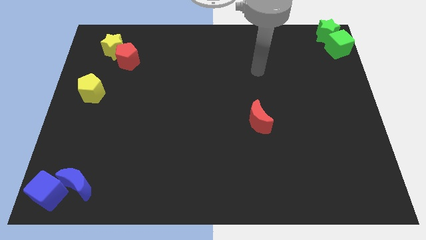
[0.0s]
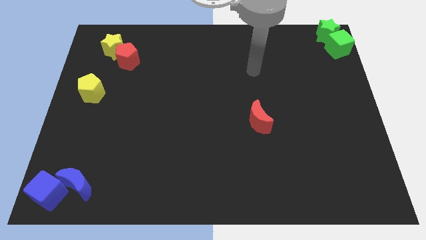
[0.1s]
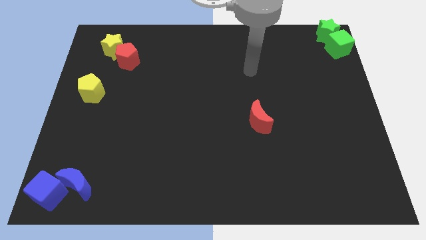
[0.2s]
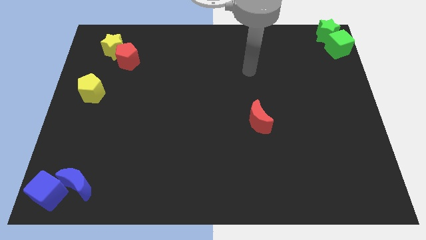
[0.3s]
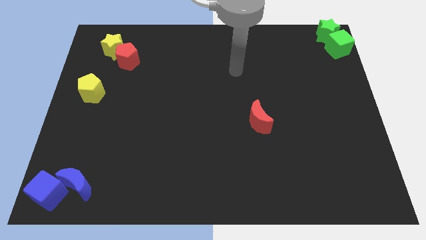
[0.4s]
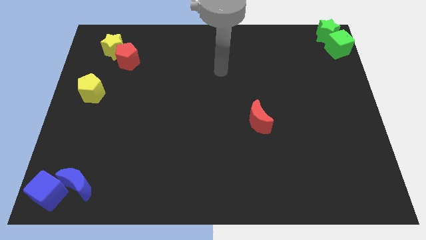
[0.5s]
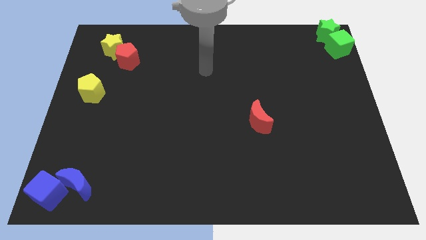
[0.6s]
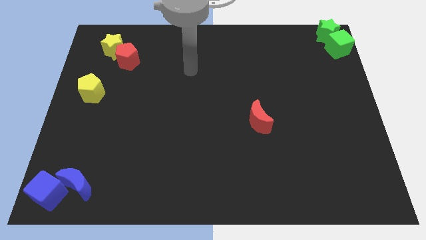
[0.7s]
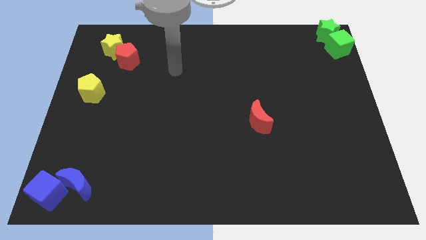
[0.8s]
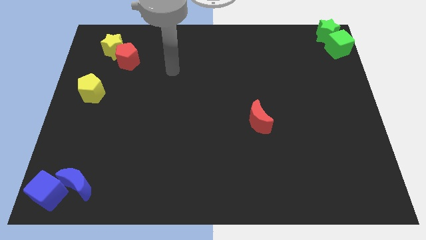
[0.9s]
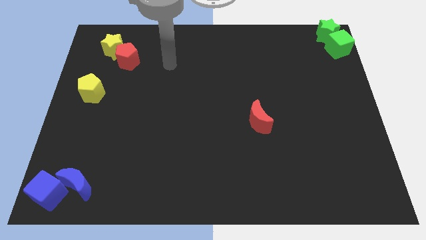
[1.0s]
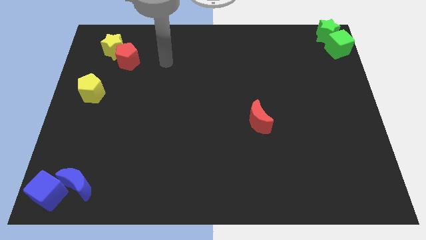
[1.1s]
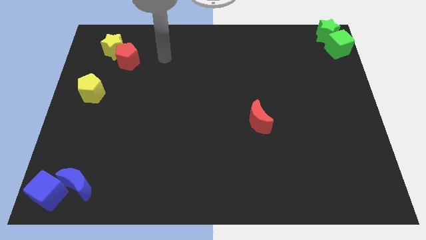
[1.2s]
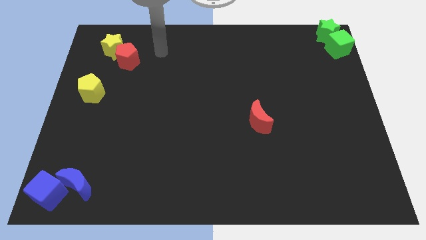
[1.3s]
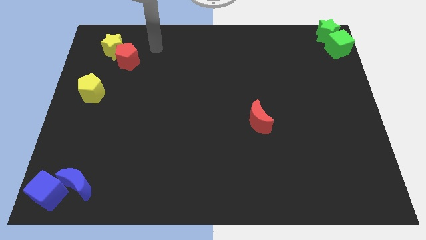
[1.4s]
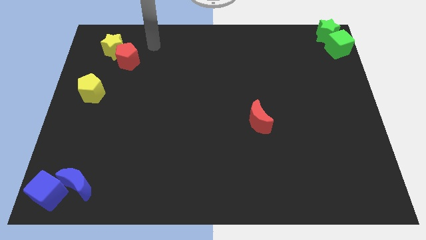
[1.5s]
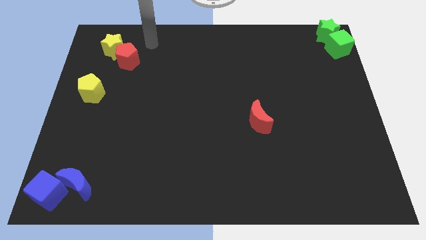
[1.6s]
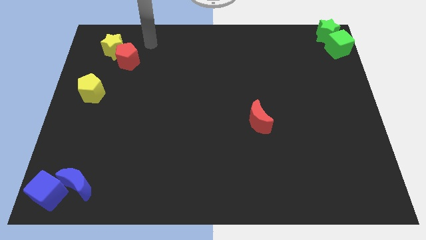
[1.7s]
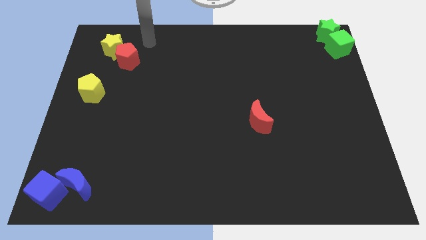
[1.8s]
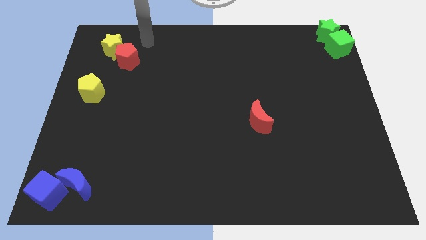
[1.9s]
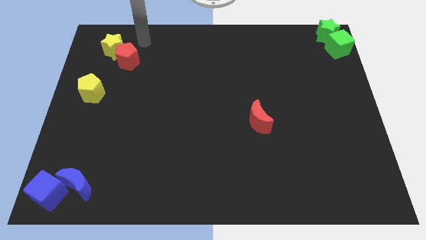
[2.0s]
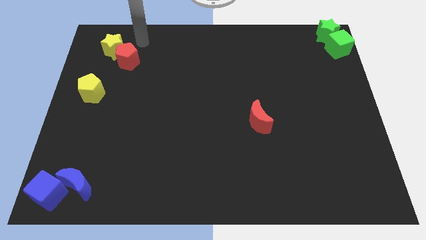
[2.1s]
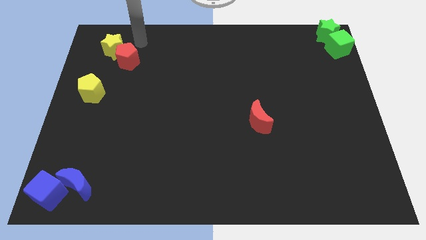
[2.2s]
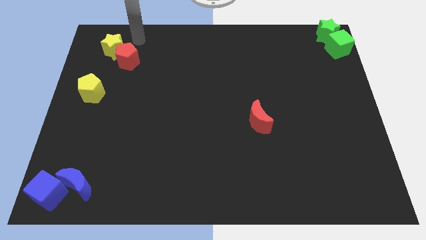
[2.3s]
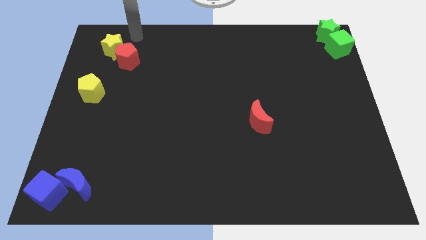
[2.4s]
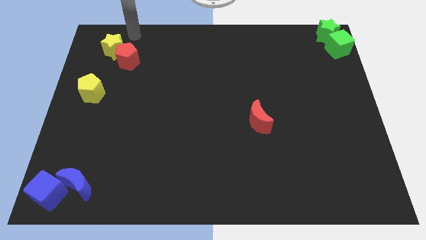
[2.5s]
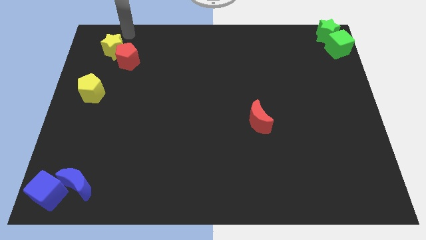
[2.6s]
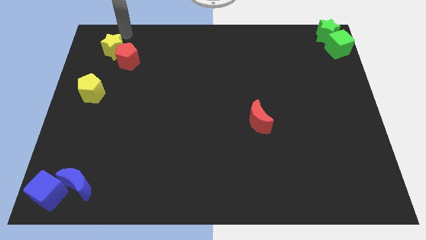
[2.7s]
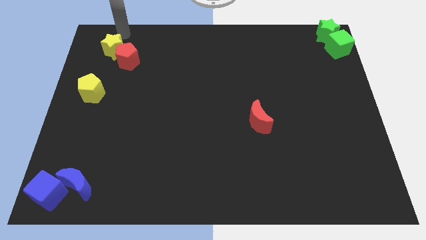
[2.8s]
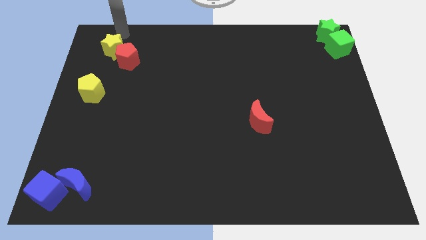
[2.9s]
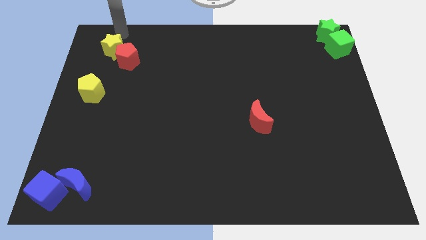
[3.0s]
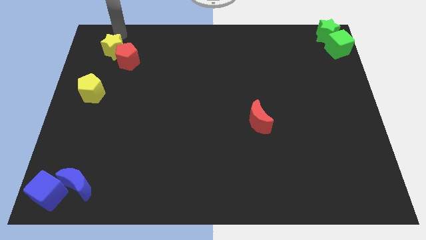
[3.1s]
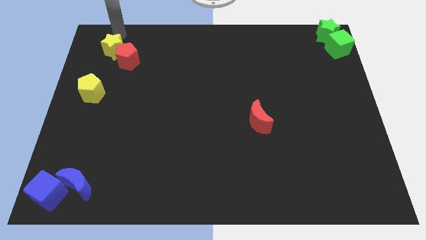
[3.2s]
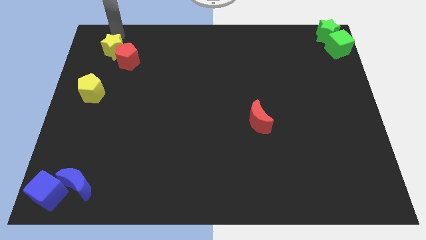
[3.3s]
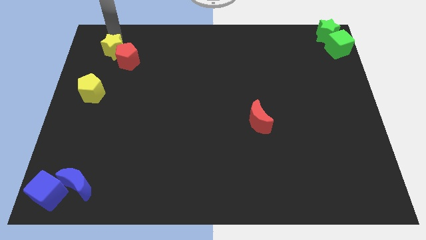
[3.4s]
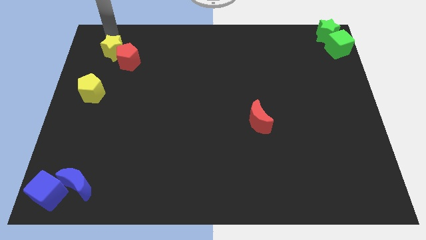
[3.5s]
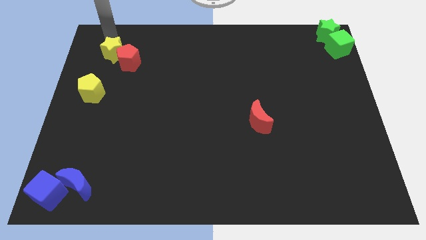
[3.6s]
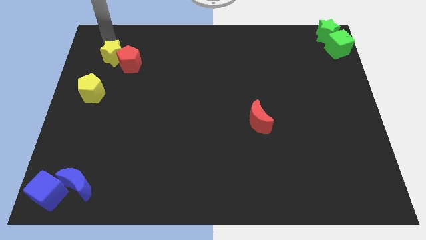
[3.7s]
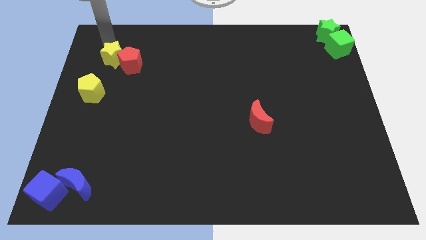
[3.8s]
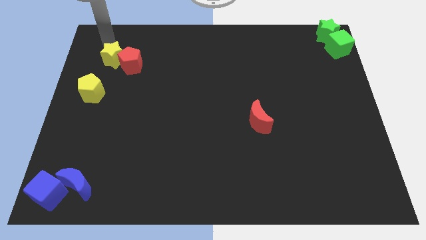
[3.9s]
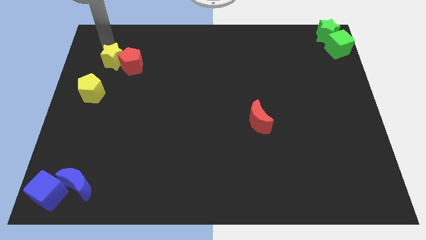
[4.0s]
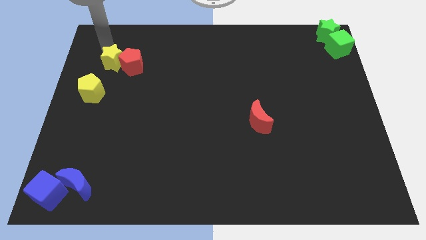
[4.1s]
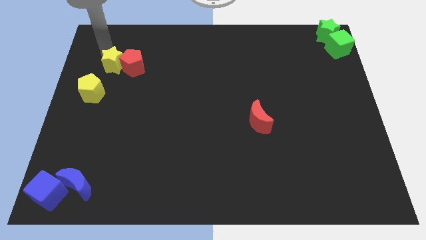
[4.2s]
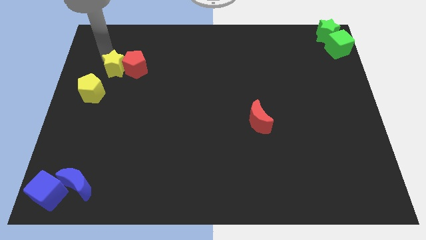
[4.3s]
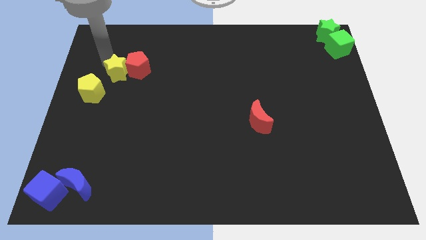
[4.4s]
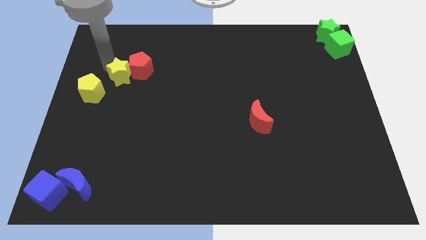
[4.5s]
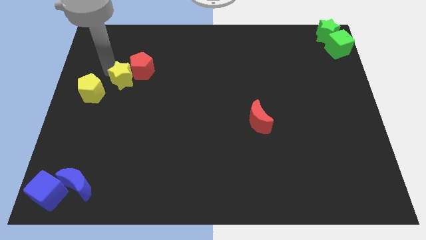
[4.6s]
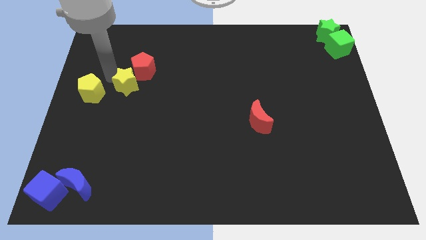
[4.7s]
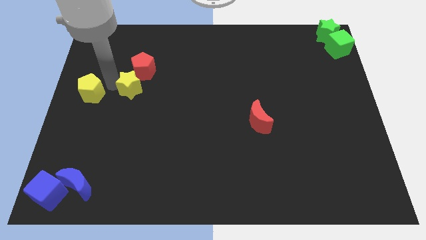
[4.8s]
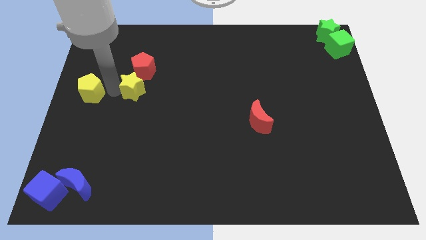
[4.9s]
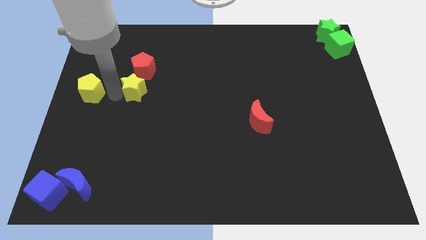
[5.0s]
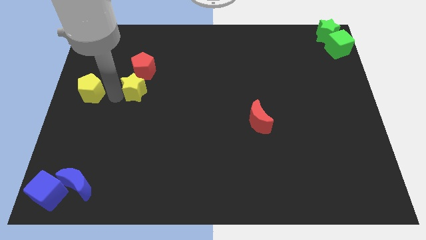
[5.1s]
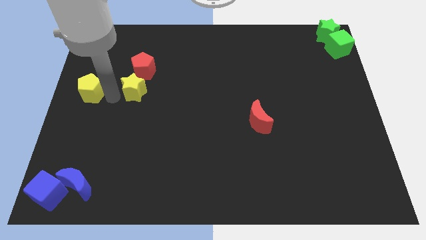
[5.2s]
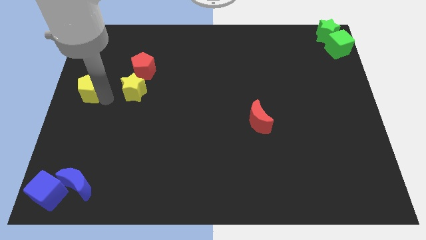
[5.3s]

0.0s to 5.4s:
push the yellow star below the red pentagon

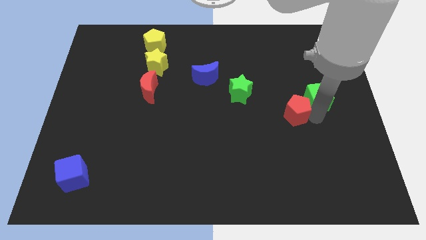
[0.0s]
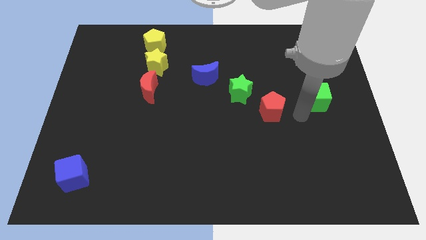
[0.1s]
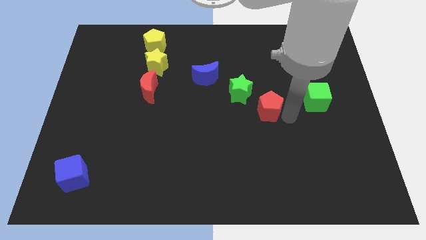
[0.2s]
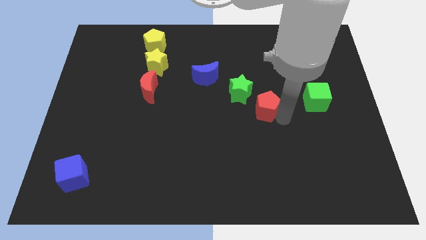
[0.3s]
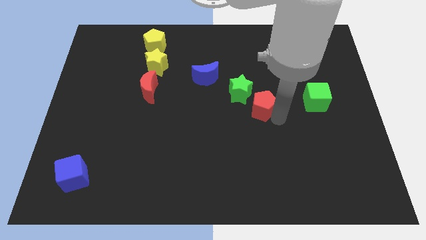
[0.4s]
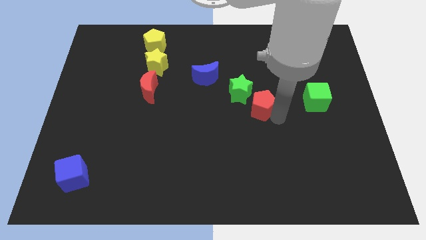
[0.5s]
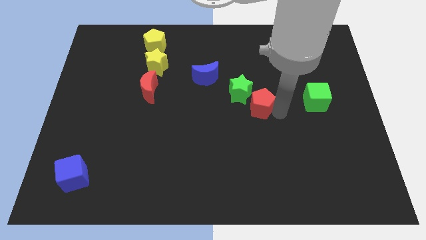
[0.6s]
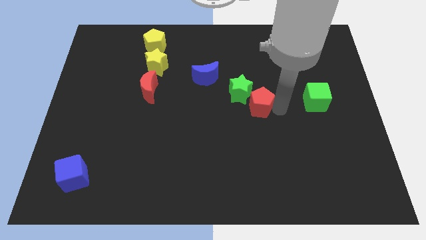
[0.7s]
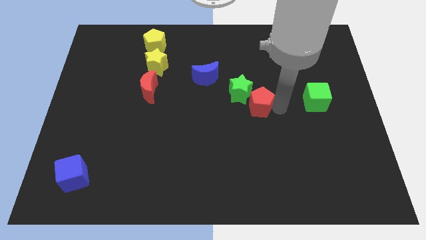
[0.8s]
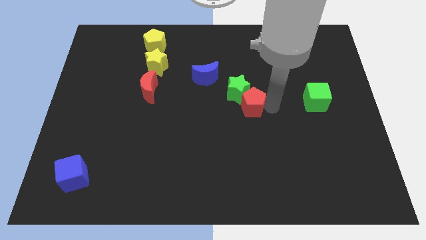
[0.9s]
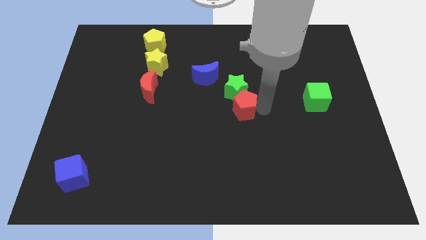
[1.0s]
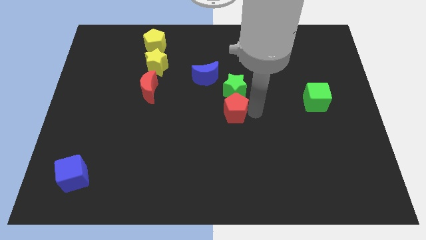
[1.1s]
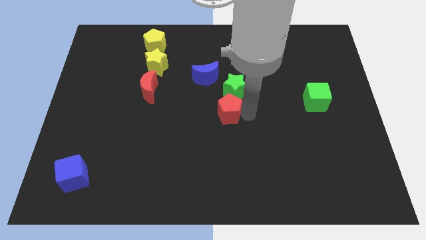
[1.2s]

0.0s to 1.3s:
push the red pentagon into the green star

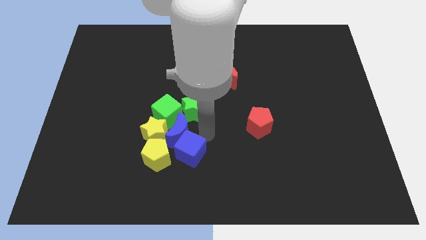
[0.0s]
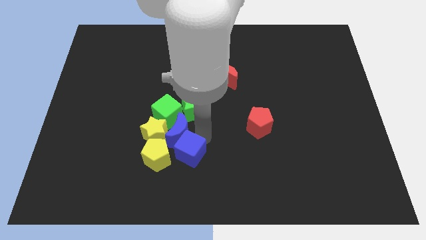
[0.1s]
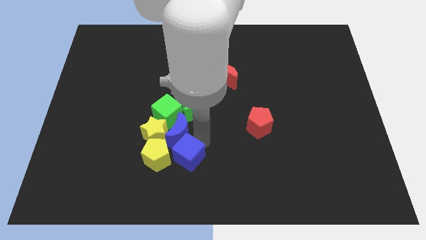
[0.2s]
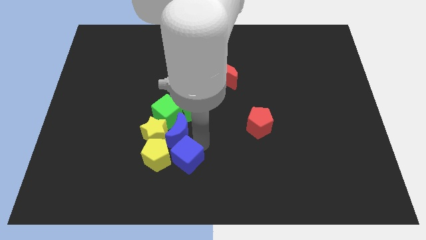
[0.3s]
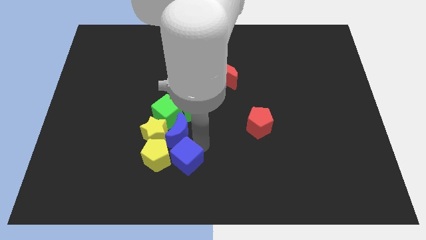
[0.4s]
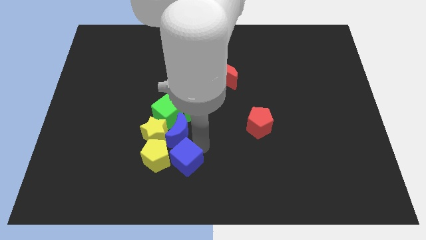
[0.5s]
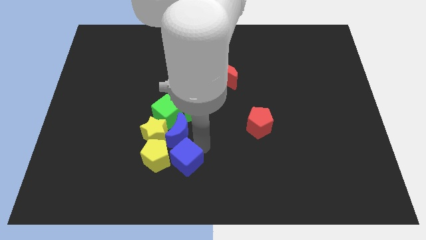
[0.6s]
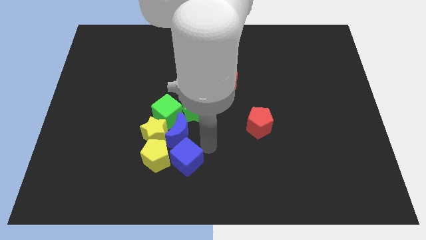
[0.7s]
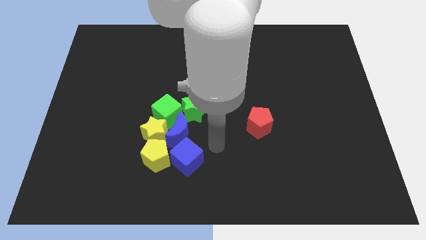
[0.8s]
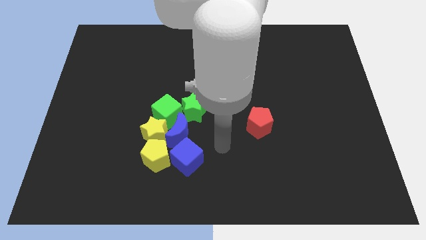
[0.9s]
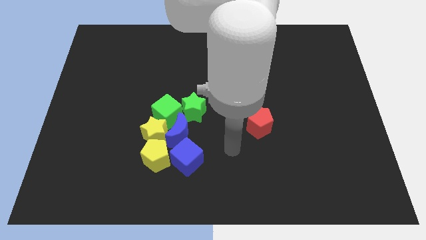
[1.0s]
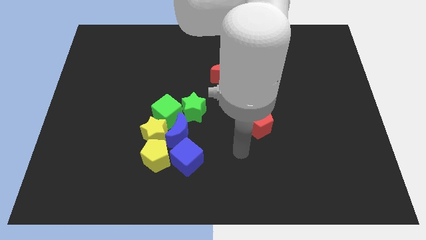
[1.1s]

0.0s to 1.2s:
slightly push the blue cube close to yellow pentagon

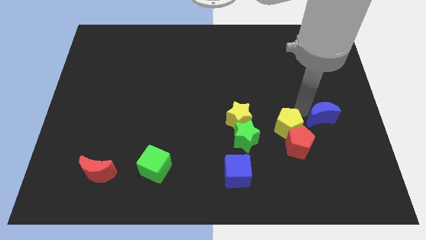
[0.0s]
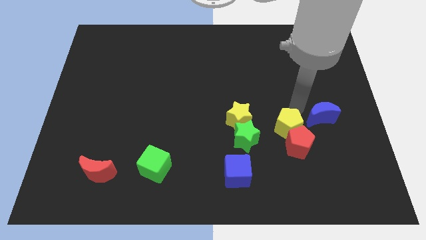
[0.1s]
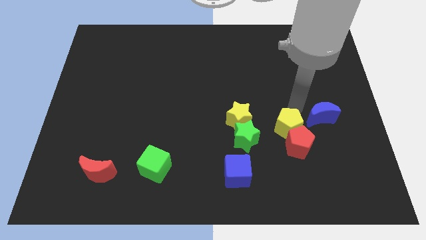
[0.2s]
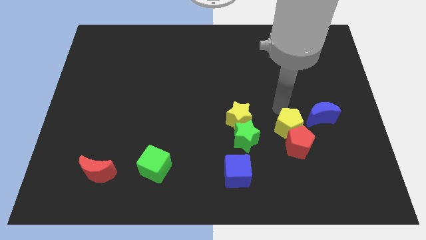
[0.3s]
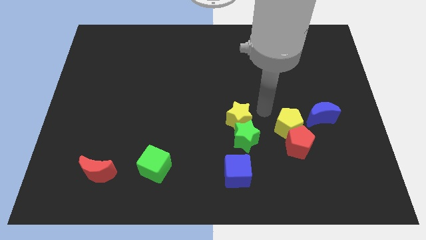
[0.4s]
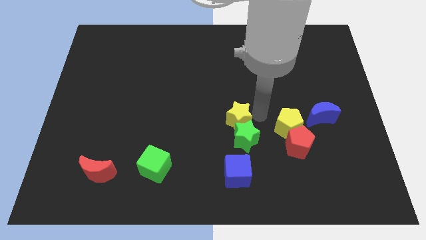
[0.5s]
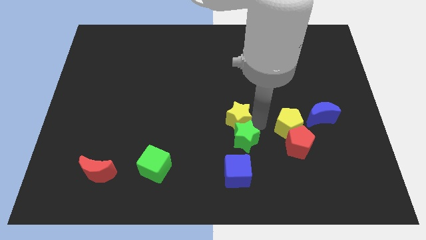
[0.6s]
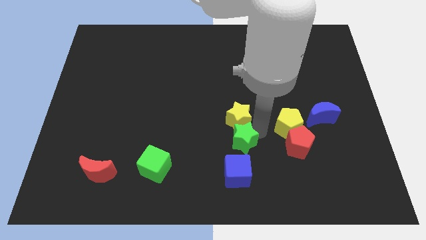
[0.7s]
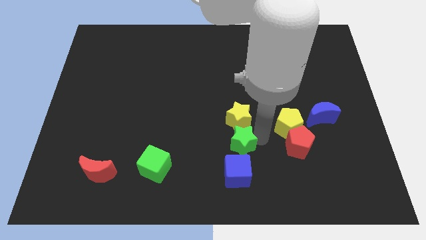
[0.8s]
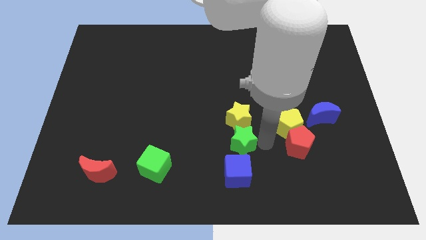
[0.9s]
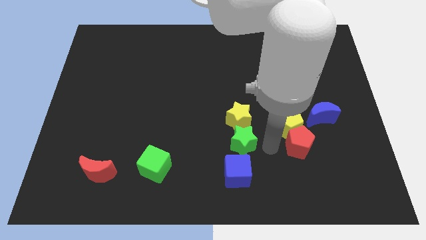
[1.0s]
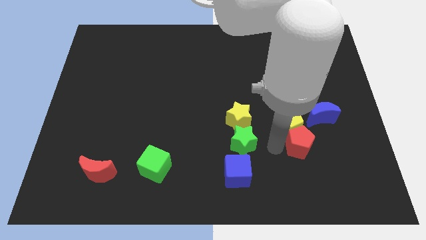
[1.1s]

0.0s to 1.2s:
place your arm in between green star and red pentagon
